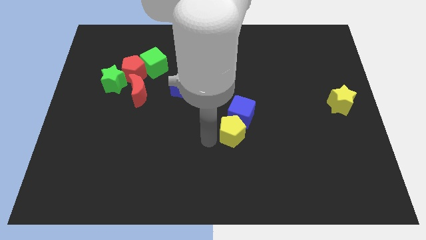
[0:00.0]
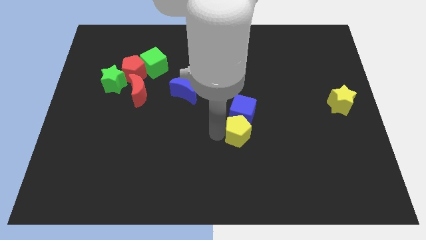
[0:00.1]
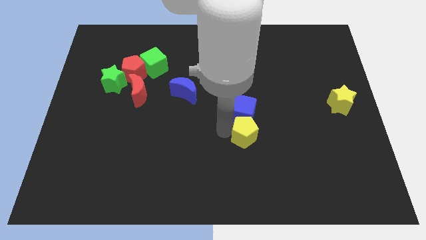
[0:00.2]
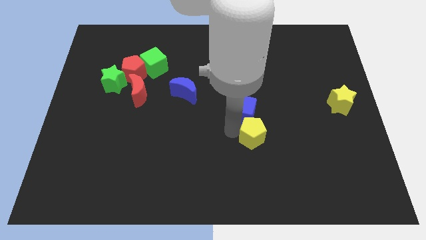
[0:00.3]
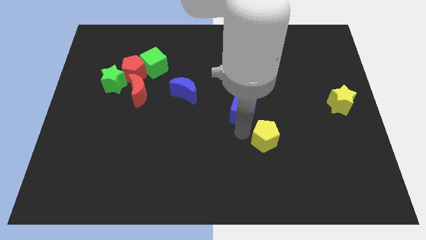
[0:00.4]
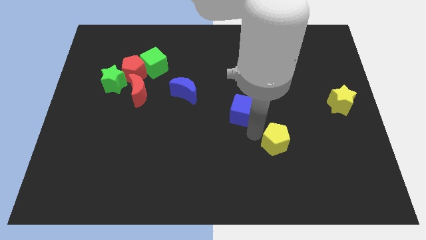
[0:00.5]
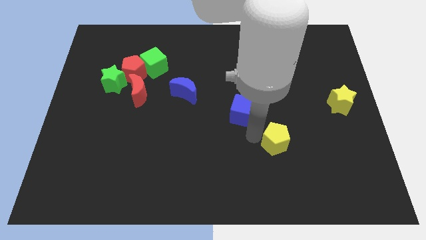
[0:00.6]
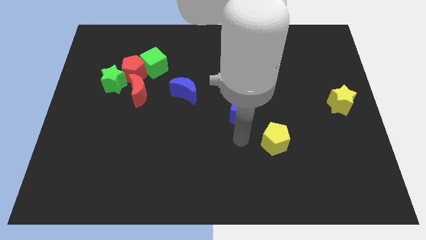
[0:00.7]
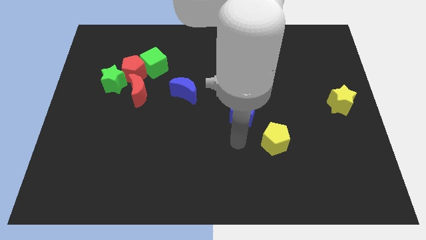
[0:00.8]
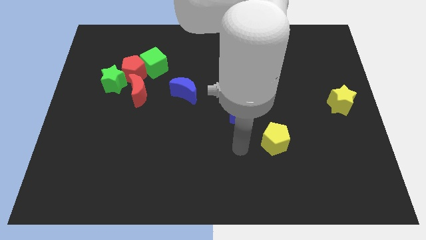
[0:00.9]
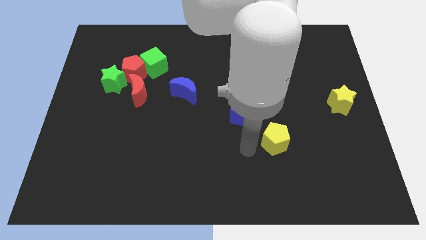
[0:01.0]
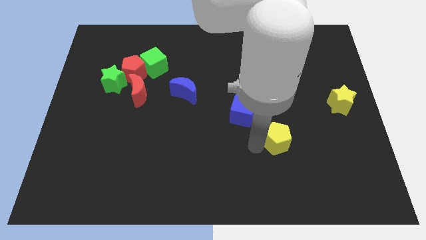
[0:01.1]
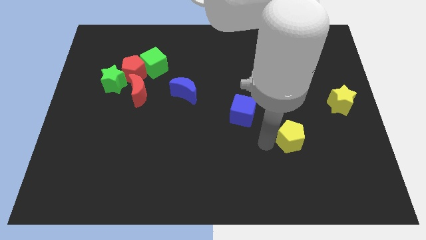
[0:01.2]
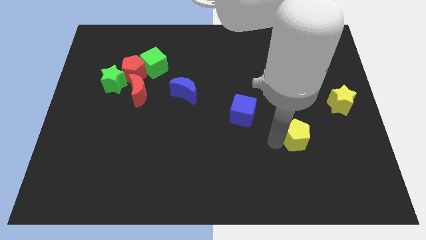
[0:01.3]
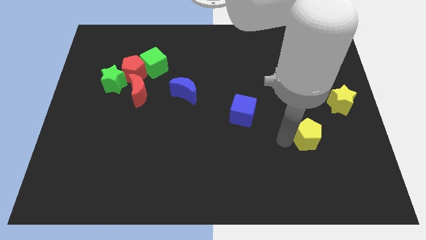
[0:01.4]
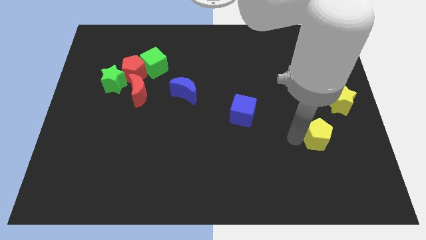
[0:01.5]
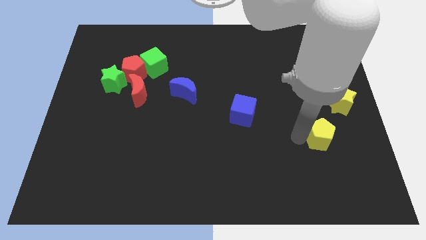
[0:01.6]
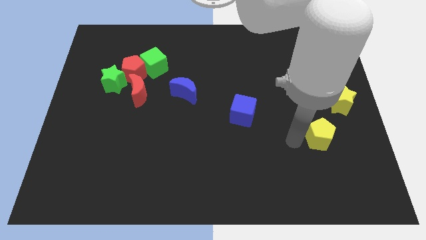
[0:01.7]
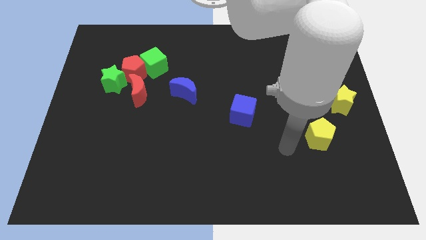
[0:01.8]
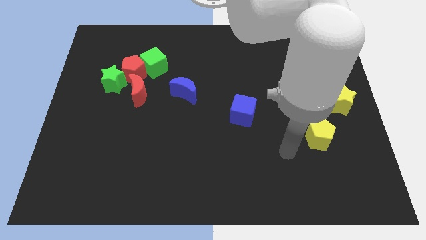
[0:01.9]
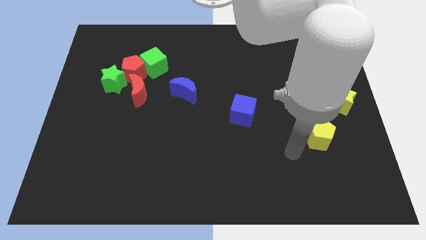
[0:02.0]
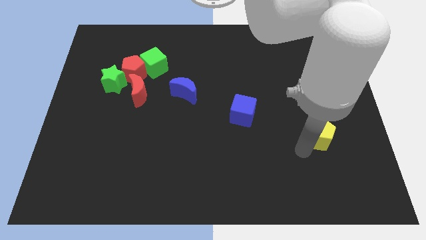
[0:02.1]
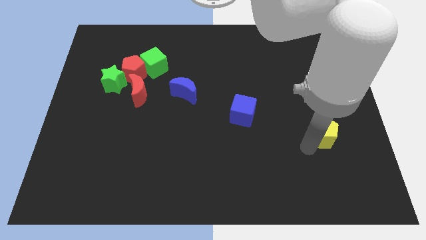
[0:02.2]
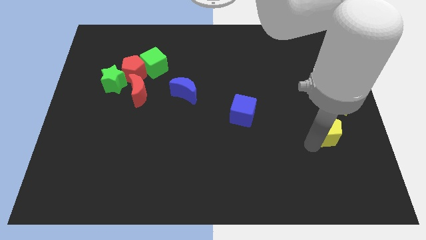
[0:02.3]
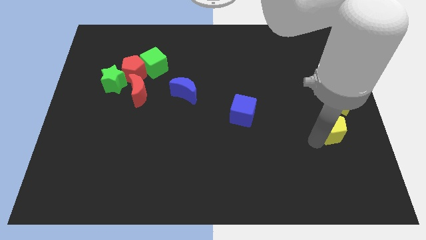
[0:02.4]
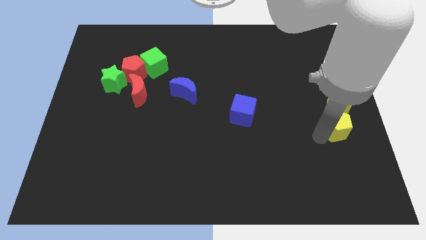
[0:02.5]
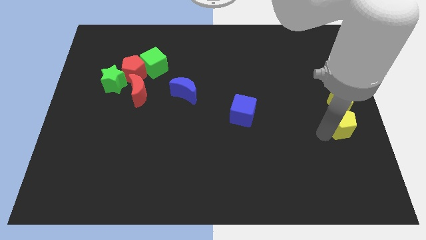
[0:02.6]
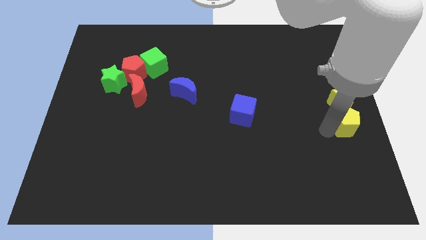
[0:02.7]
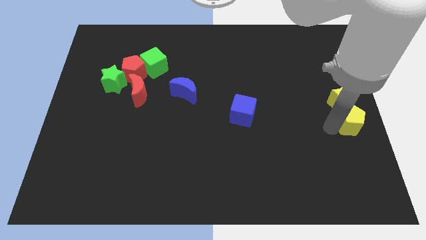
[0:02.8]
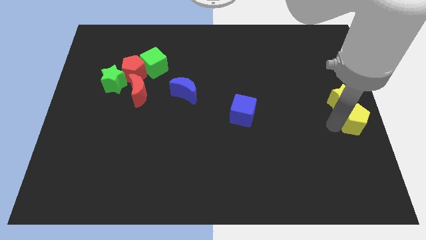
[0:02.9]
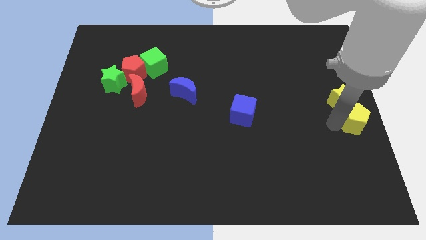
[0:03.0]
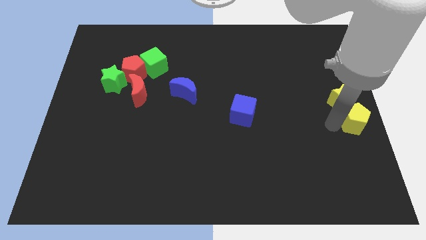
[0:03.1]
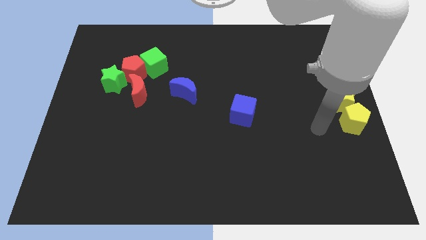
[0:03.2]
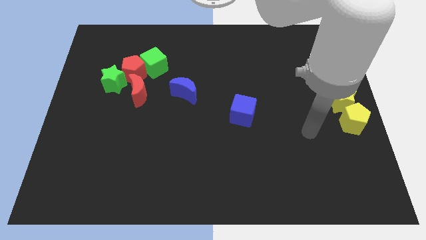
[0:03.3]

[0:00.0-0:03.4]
place the yellow pentagon below the yellow star

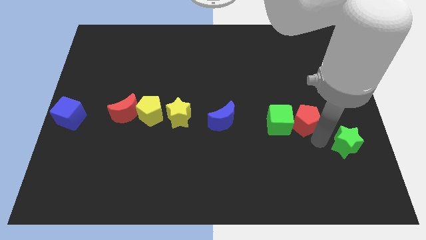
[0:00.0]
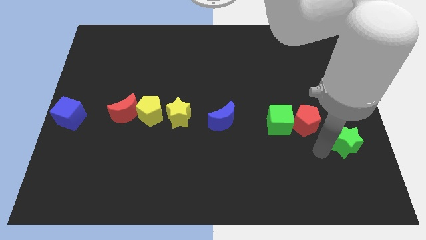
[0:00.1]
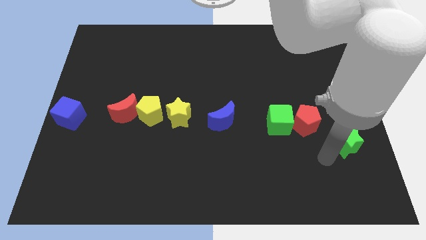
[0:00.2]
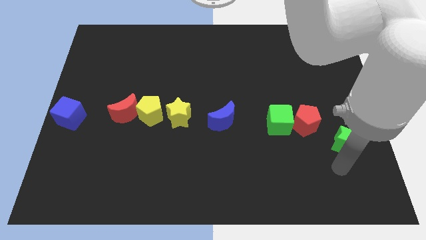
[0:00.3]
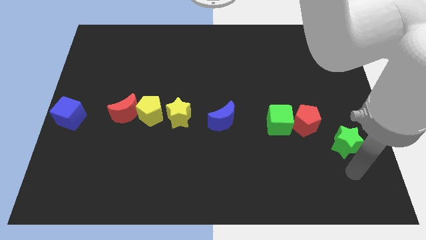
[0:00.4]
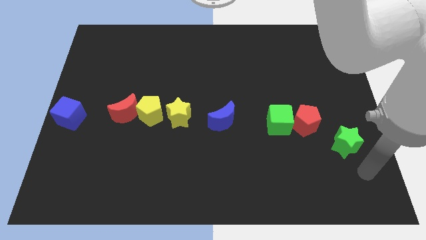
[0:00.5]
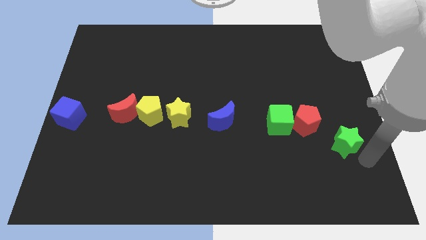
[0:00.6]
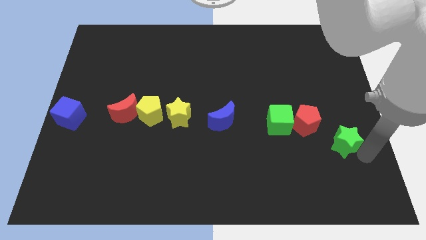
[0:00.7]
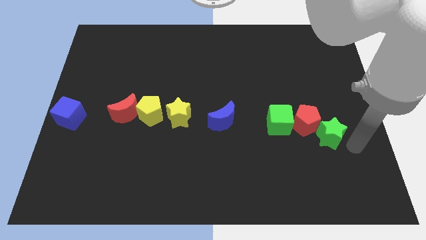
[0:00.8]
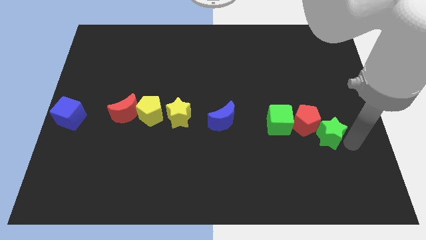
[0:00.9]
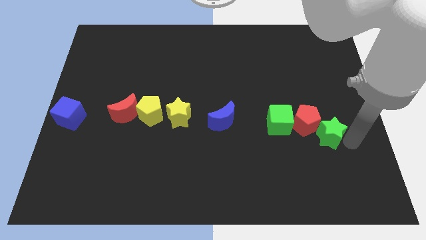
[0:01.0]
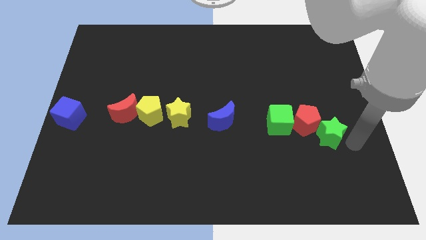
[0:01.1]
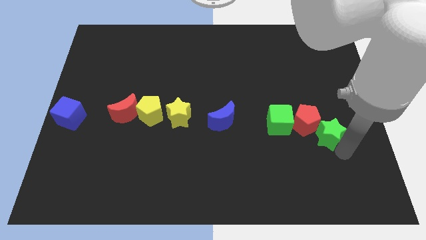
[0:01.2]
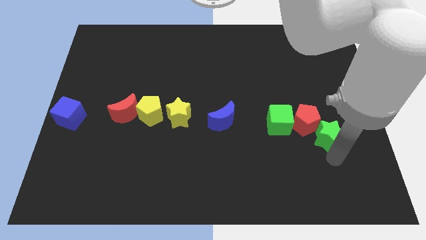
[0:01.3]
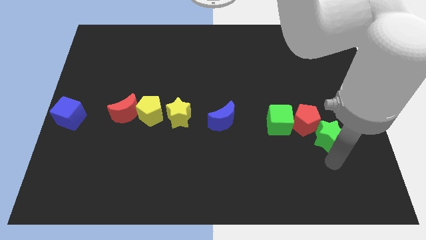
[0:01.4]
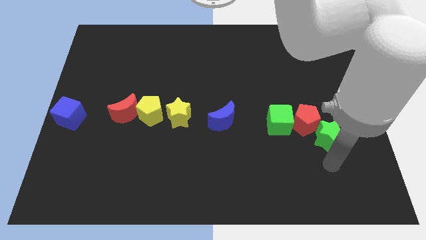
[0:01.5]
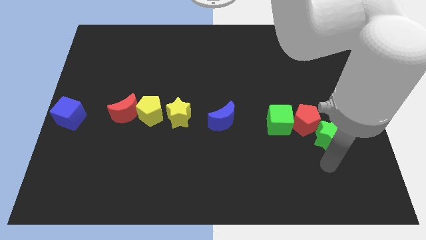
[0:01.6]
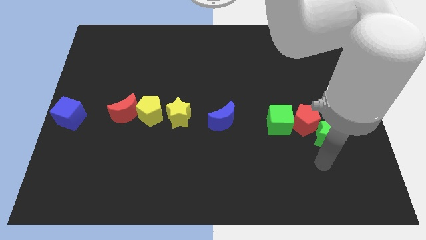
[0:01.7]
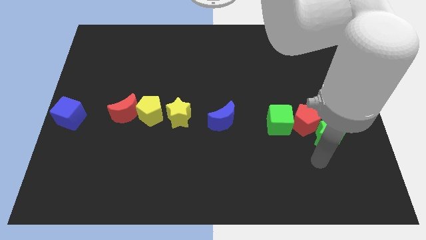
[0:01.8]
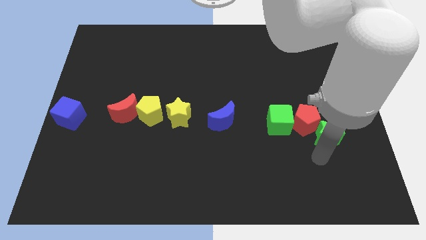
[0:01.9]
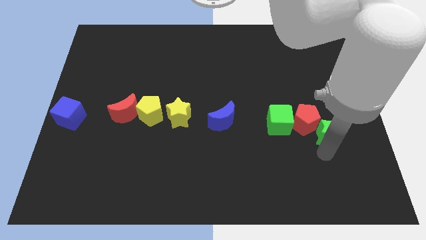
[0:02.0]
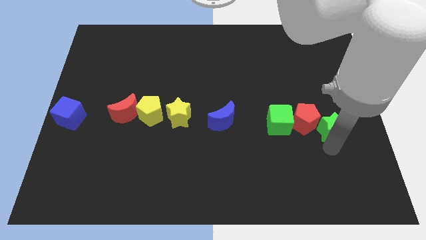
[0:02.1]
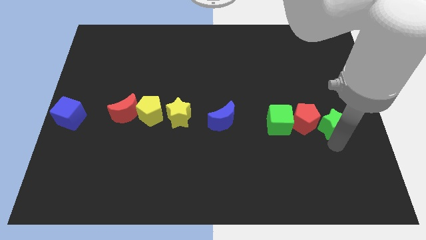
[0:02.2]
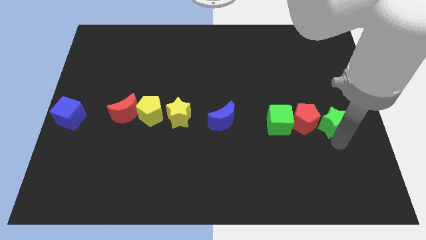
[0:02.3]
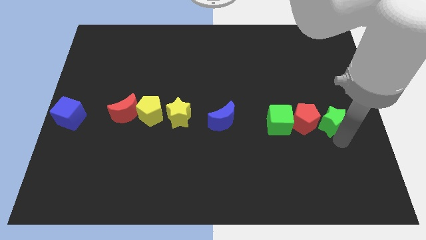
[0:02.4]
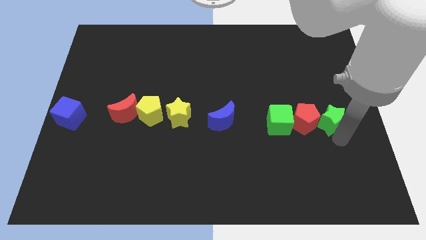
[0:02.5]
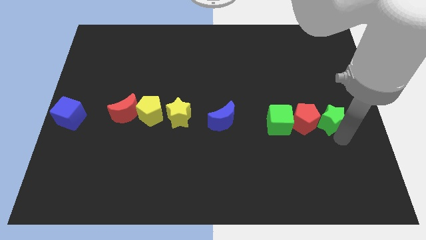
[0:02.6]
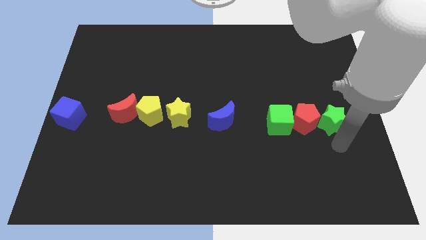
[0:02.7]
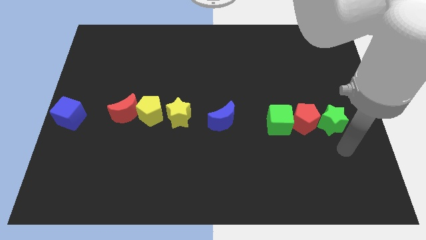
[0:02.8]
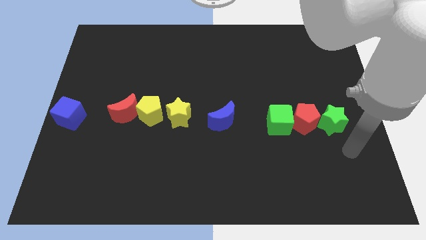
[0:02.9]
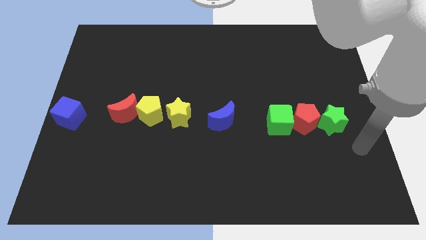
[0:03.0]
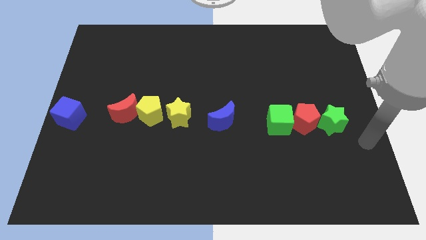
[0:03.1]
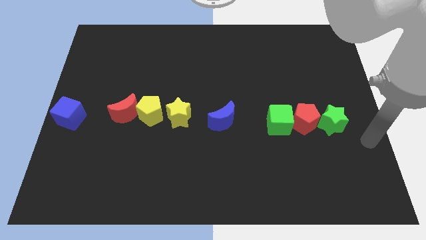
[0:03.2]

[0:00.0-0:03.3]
place the green star to the right of the red pentagon

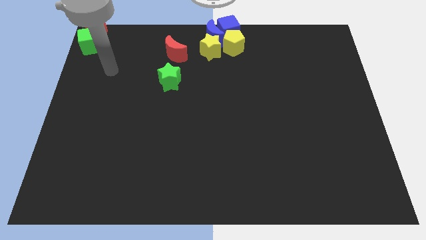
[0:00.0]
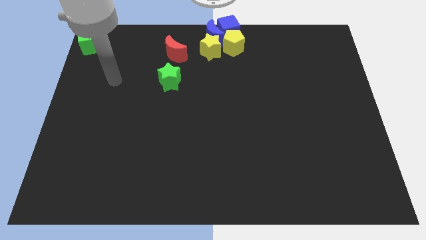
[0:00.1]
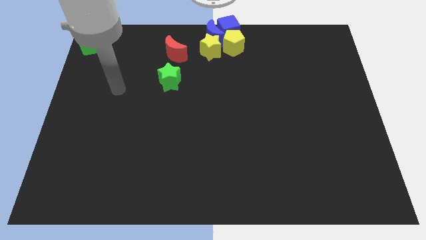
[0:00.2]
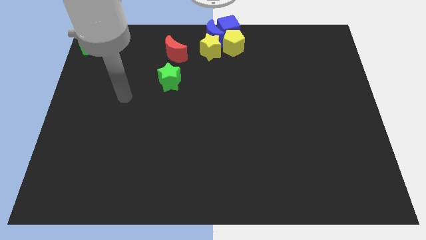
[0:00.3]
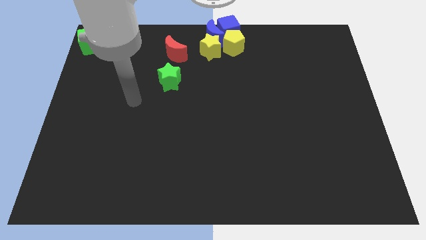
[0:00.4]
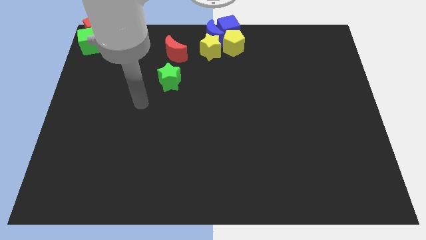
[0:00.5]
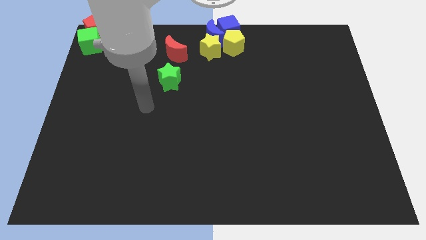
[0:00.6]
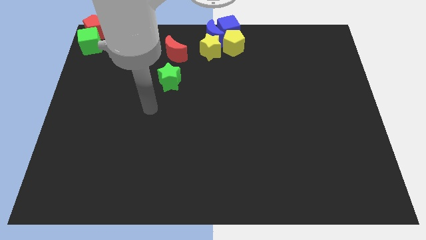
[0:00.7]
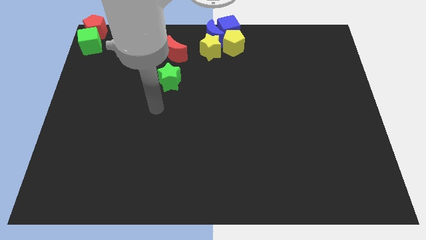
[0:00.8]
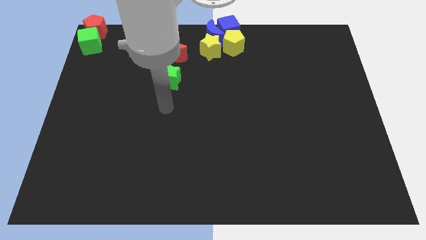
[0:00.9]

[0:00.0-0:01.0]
go away from the green cube

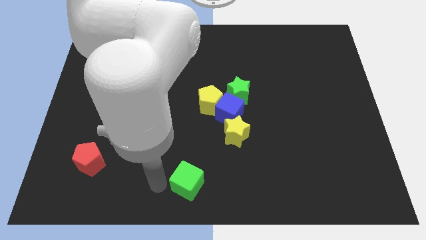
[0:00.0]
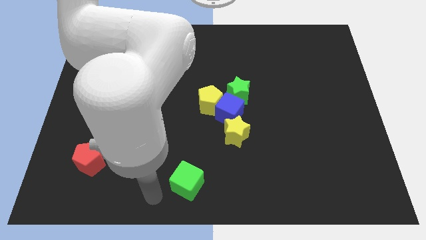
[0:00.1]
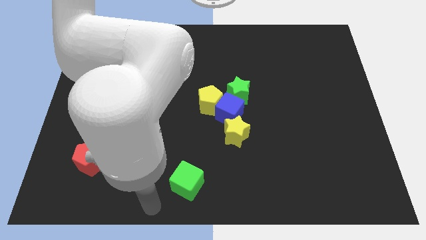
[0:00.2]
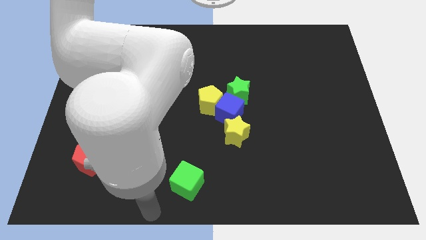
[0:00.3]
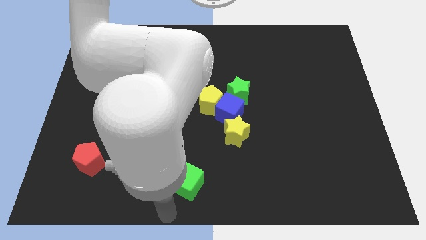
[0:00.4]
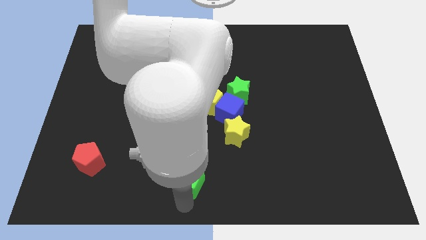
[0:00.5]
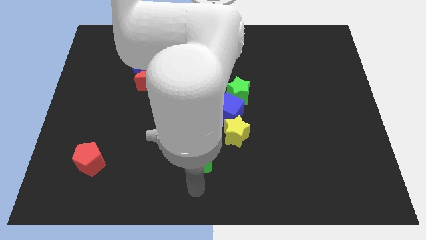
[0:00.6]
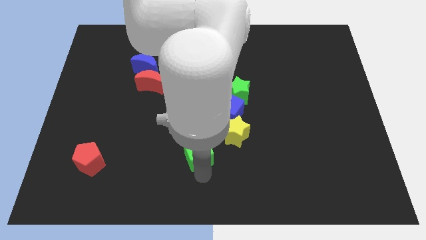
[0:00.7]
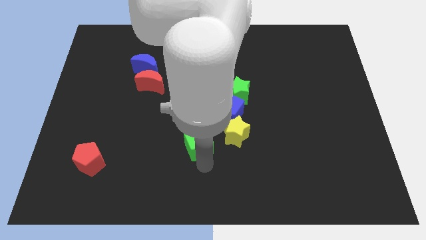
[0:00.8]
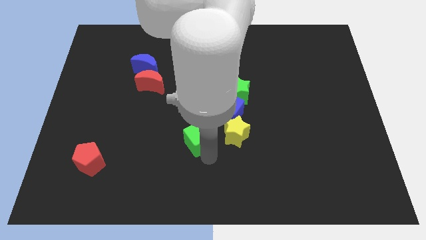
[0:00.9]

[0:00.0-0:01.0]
move green cube slightly up

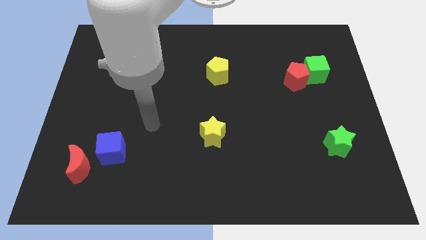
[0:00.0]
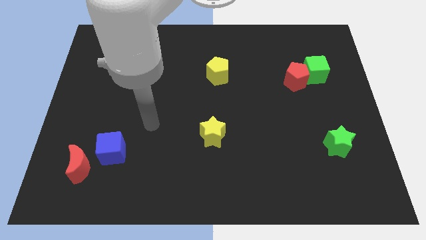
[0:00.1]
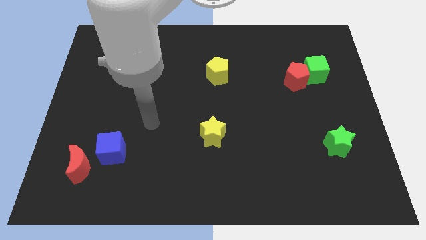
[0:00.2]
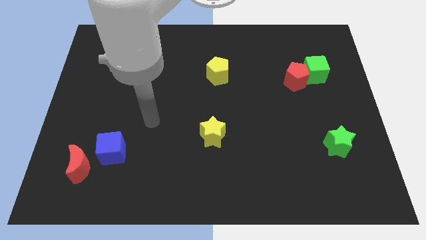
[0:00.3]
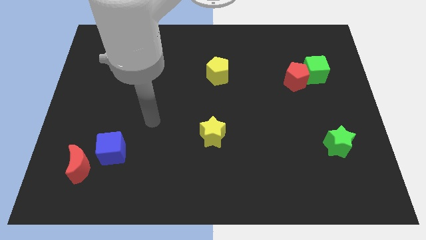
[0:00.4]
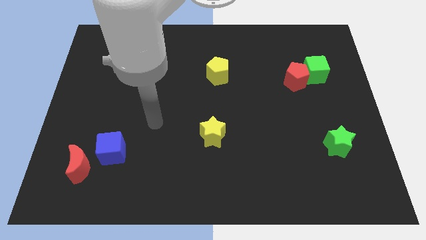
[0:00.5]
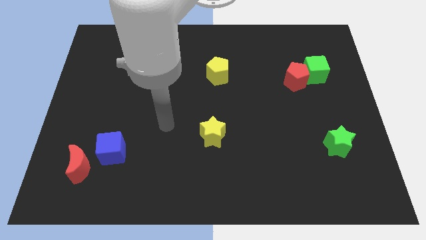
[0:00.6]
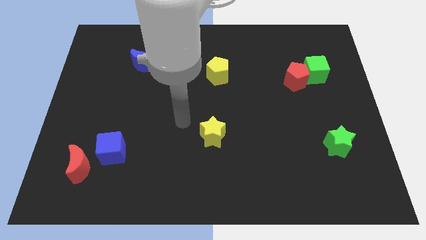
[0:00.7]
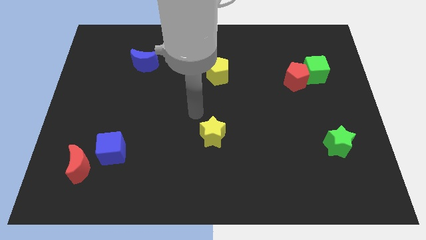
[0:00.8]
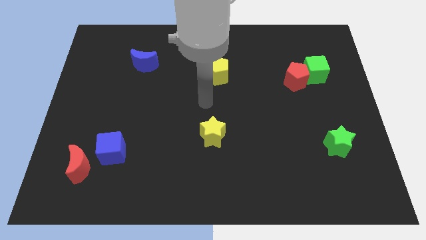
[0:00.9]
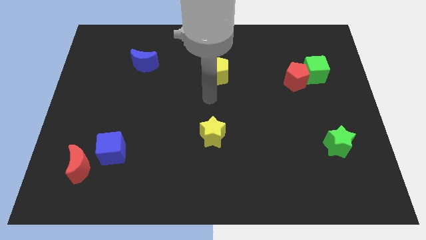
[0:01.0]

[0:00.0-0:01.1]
point your hand below the yellow pentagon
